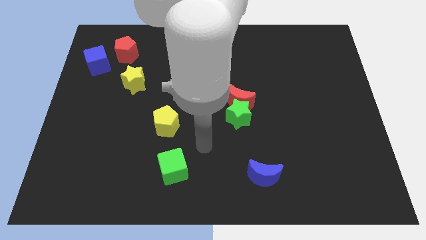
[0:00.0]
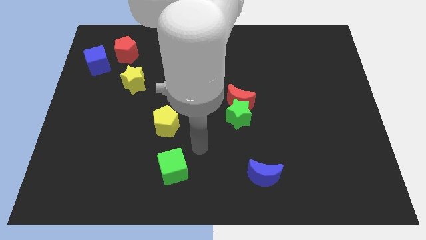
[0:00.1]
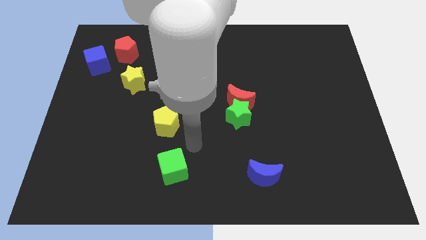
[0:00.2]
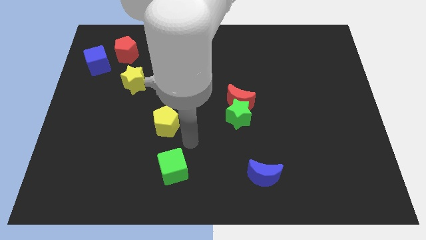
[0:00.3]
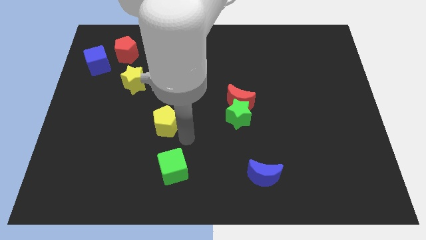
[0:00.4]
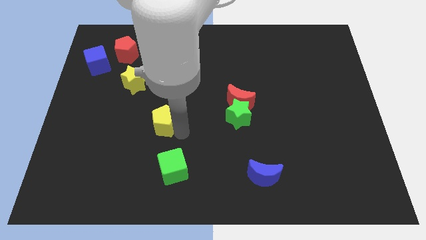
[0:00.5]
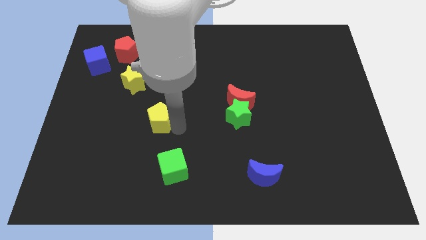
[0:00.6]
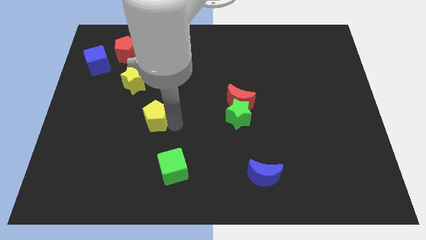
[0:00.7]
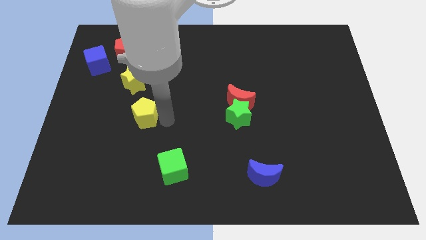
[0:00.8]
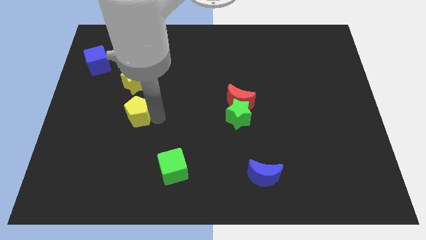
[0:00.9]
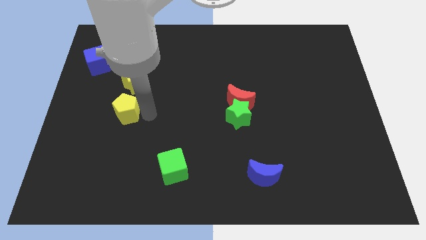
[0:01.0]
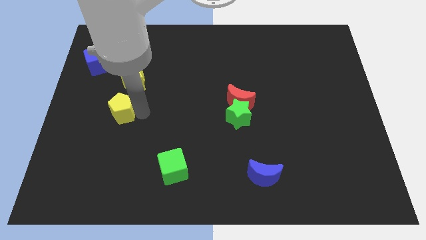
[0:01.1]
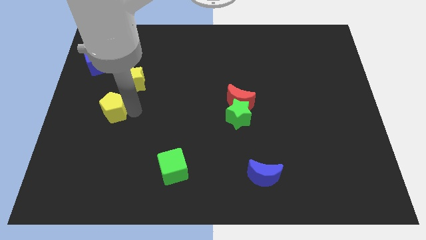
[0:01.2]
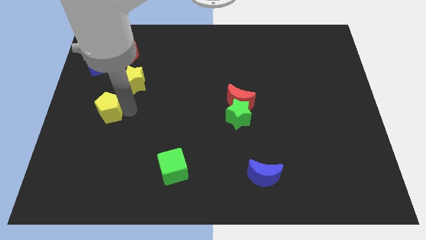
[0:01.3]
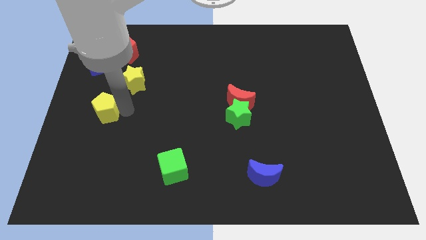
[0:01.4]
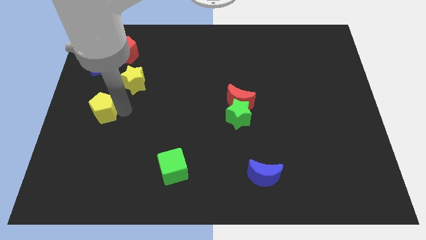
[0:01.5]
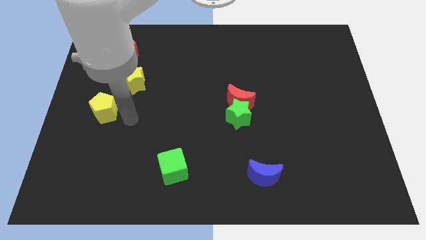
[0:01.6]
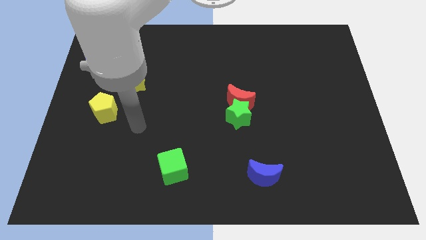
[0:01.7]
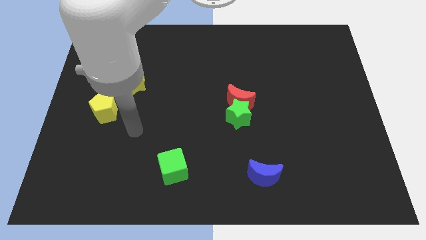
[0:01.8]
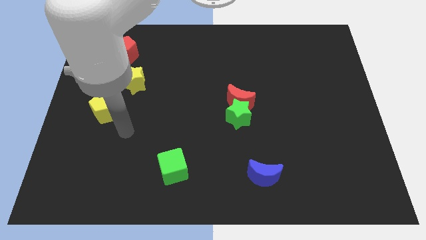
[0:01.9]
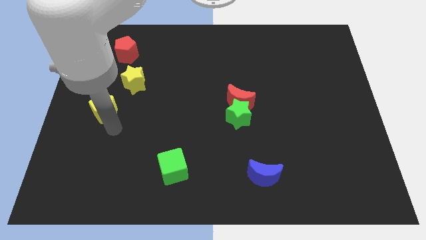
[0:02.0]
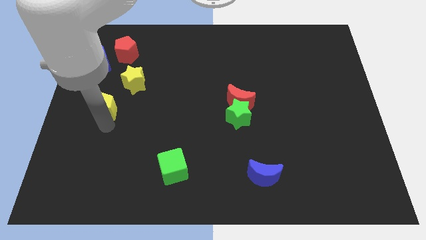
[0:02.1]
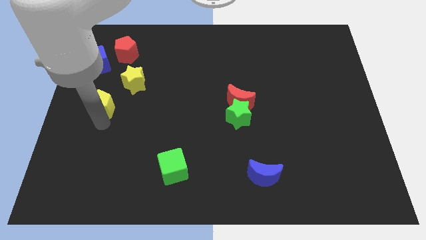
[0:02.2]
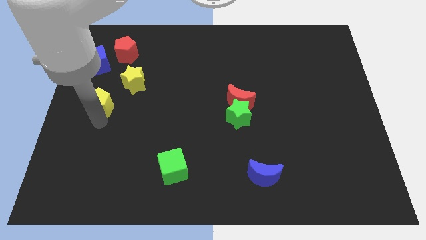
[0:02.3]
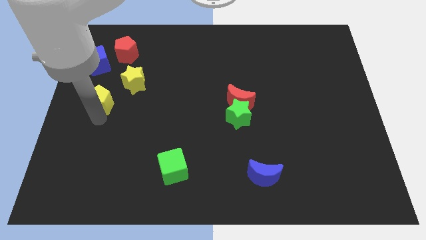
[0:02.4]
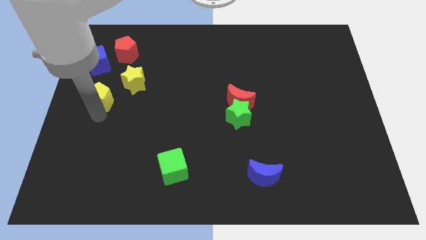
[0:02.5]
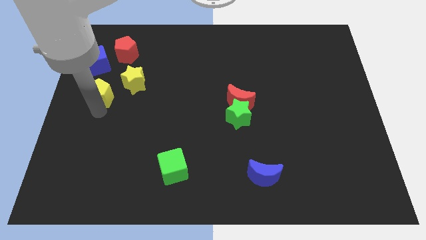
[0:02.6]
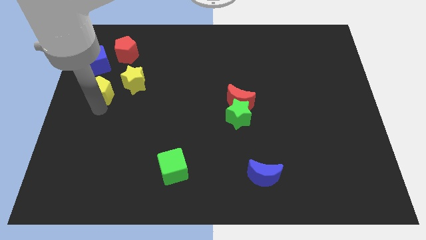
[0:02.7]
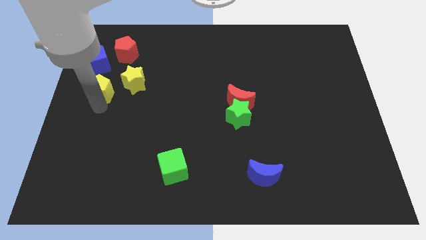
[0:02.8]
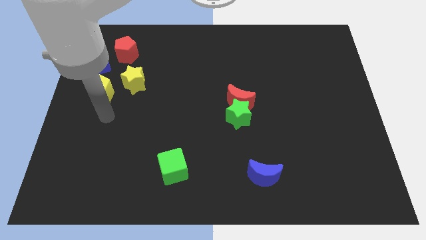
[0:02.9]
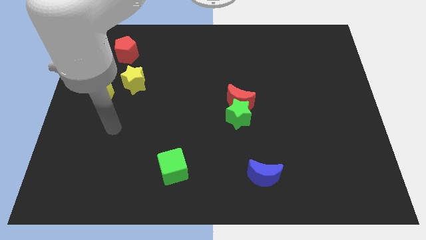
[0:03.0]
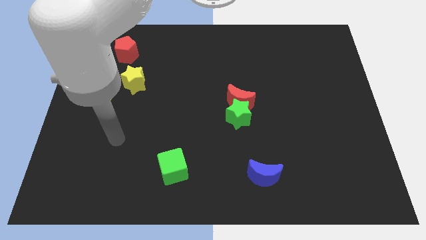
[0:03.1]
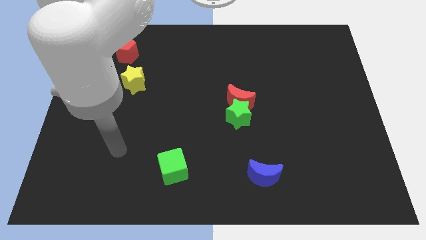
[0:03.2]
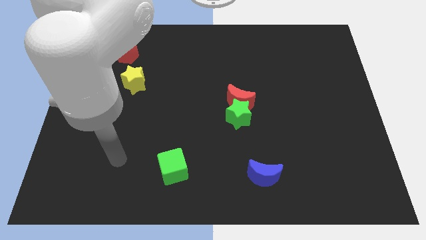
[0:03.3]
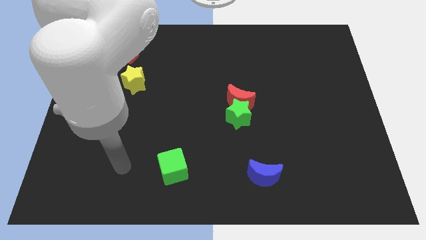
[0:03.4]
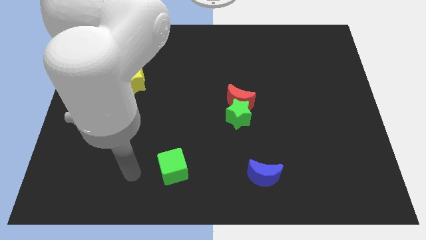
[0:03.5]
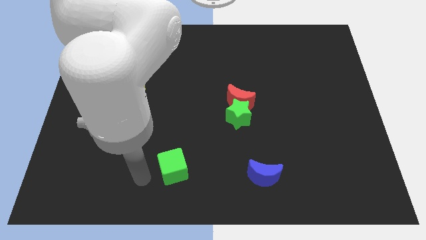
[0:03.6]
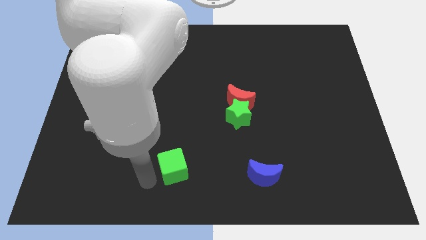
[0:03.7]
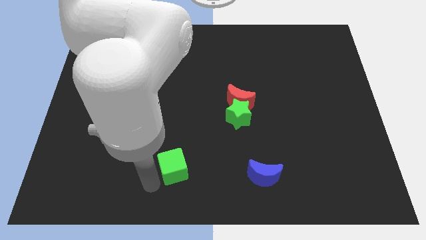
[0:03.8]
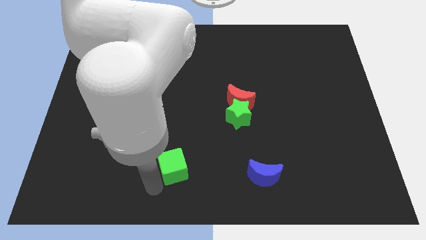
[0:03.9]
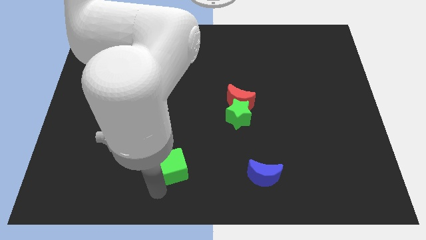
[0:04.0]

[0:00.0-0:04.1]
push the yellow pentagon to the bottom of the blue cube

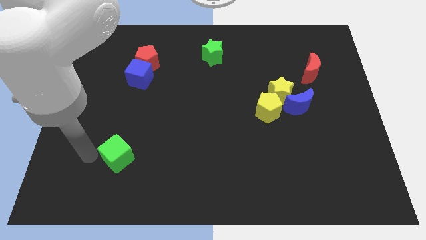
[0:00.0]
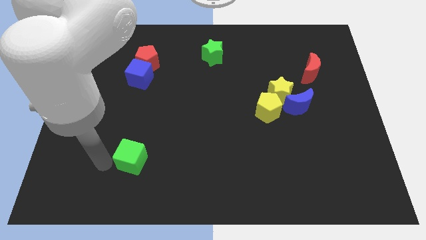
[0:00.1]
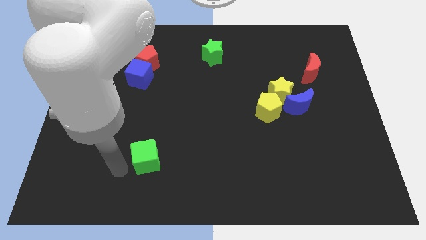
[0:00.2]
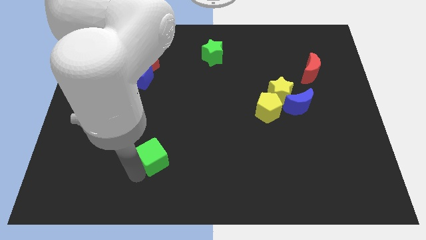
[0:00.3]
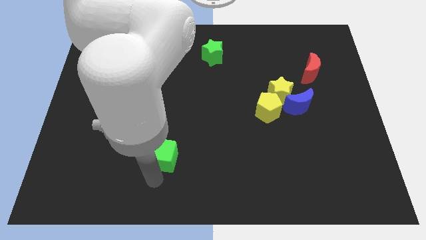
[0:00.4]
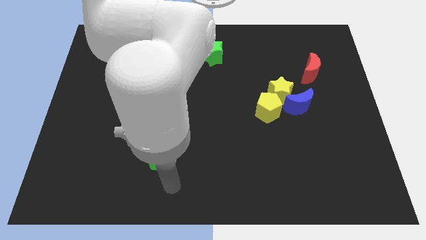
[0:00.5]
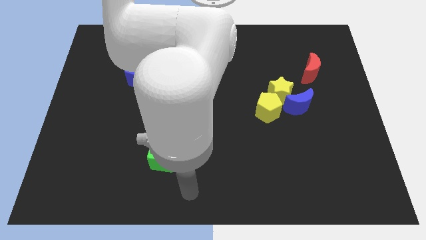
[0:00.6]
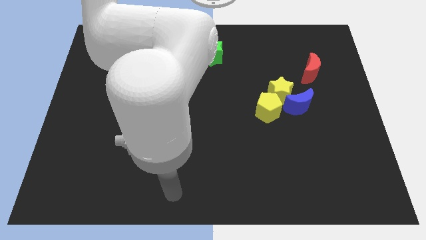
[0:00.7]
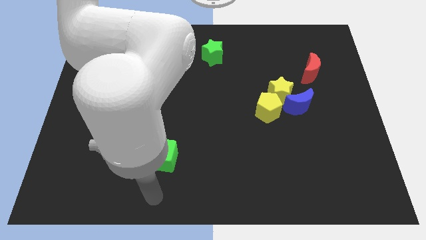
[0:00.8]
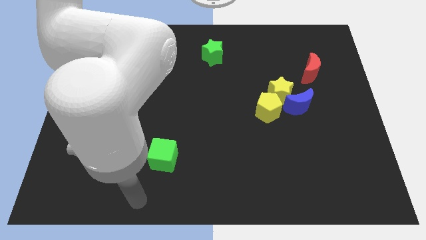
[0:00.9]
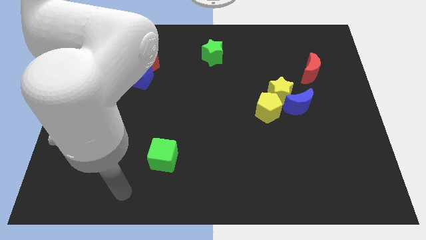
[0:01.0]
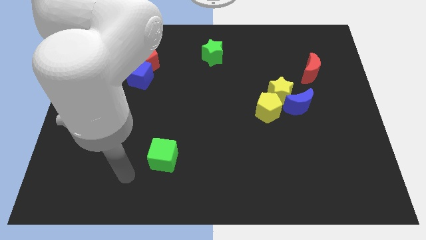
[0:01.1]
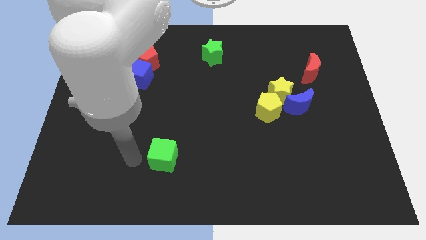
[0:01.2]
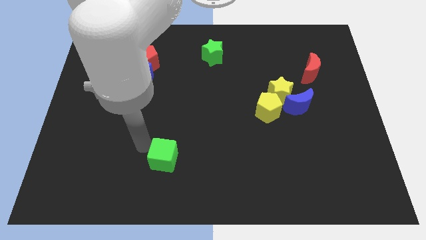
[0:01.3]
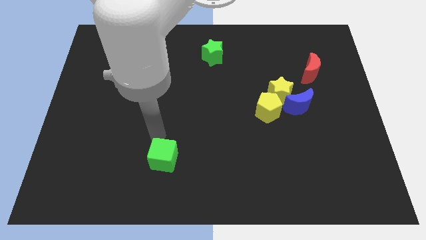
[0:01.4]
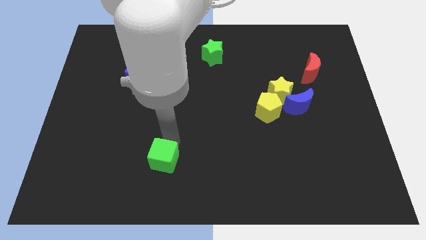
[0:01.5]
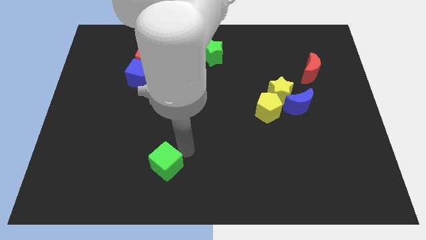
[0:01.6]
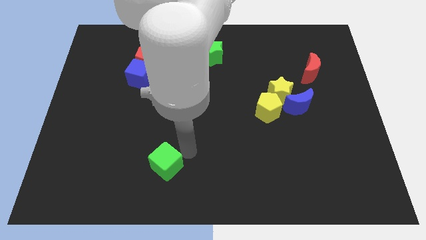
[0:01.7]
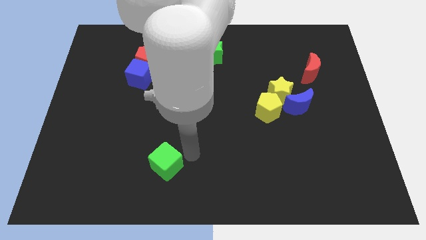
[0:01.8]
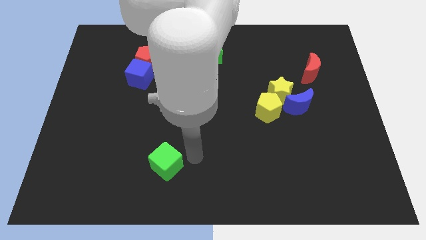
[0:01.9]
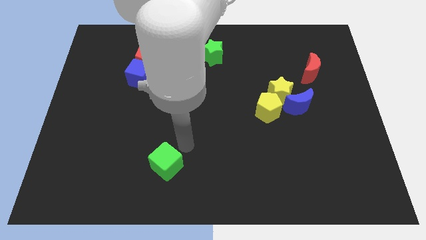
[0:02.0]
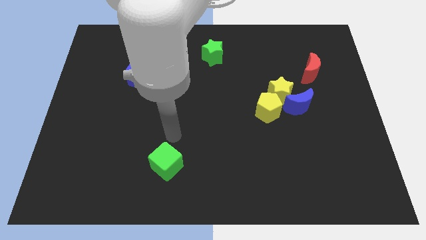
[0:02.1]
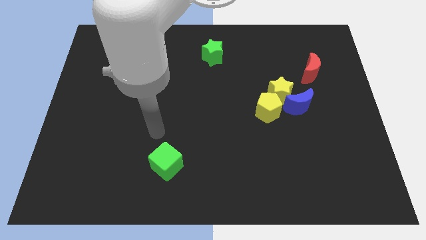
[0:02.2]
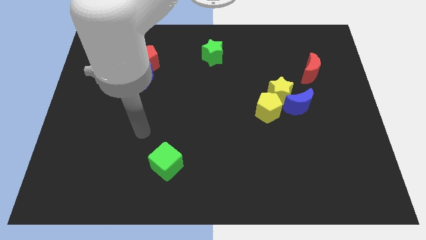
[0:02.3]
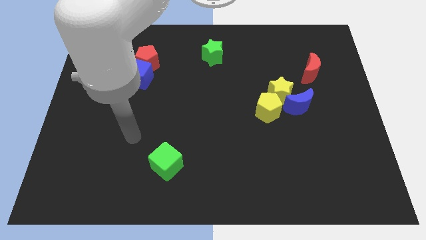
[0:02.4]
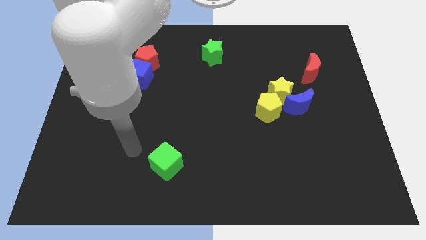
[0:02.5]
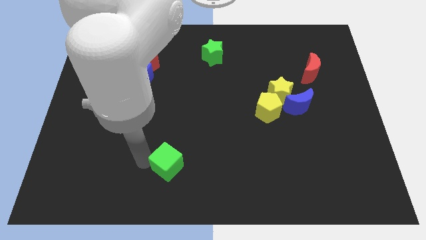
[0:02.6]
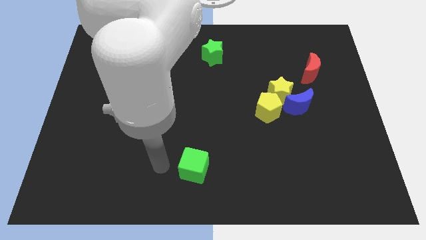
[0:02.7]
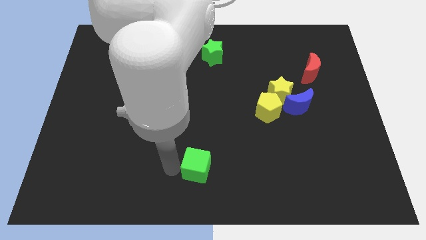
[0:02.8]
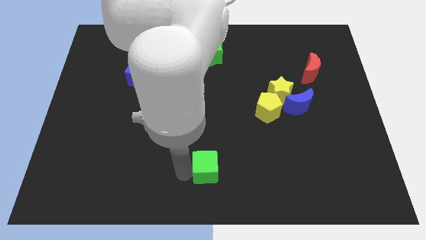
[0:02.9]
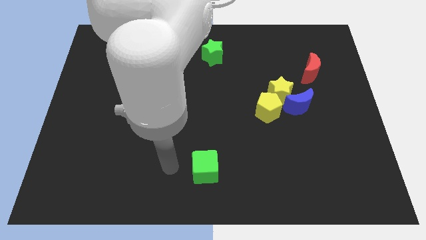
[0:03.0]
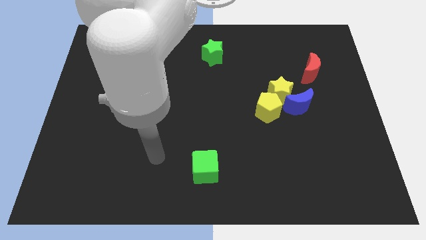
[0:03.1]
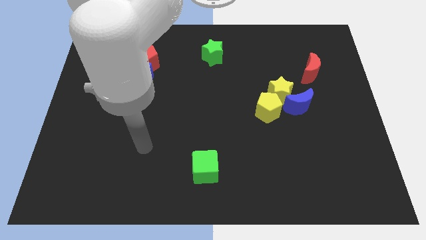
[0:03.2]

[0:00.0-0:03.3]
slide green cube in the bottom center

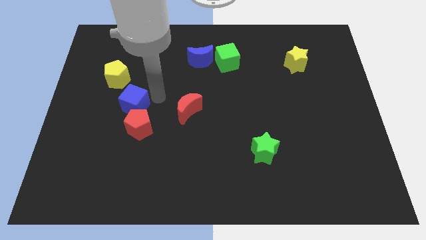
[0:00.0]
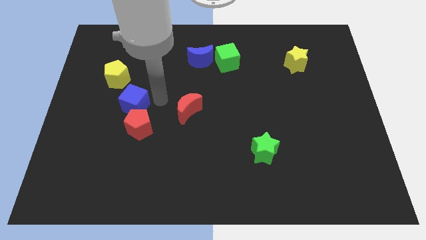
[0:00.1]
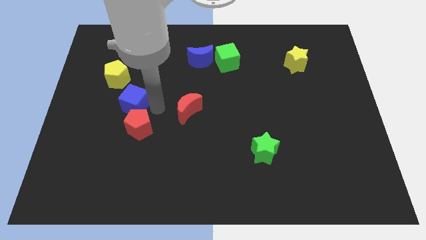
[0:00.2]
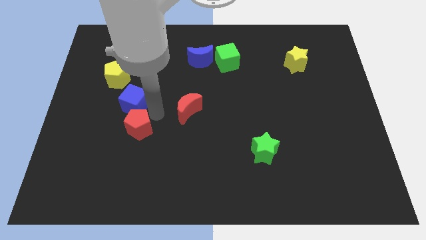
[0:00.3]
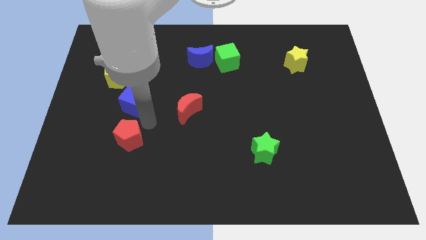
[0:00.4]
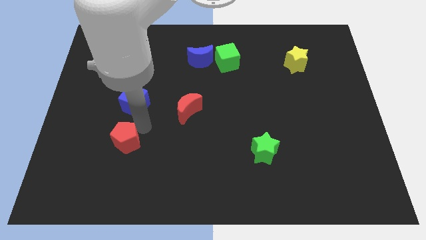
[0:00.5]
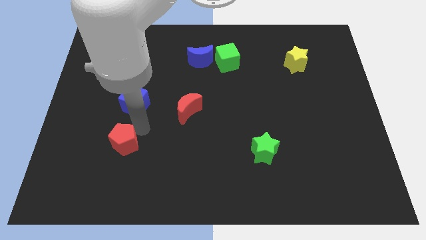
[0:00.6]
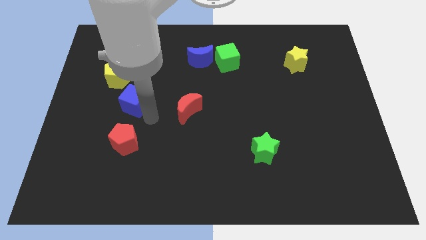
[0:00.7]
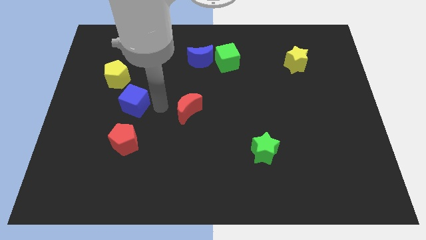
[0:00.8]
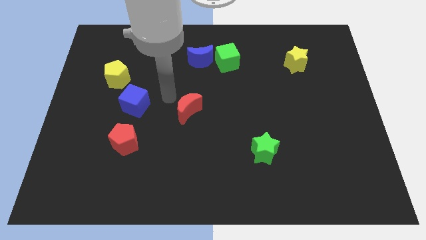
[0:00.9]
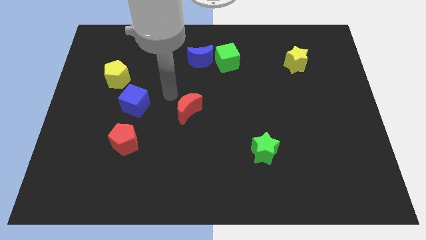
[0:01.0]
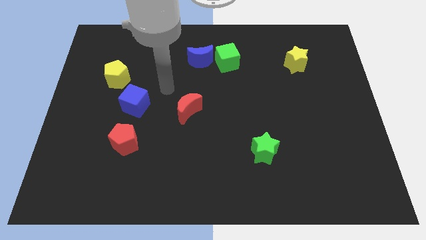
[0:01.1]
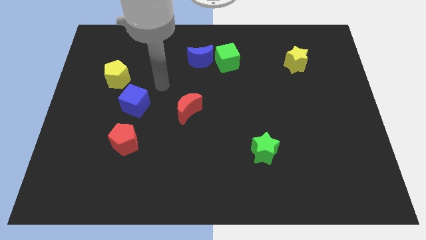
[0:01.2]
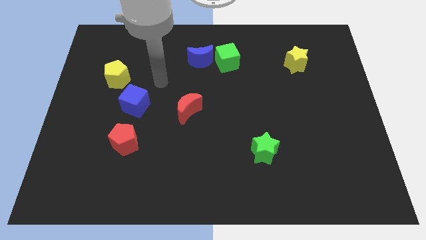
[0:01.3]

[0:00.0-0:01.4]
push the red pentagon towards the bottom left corner of the board

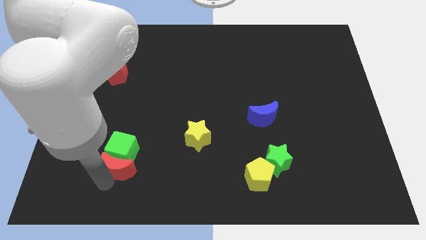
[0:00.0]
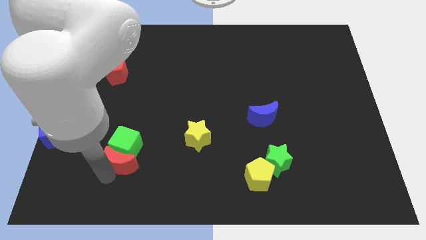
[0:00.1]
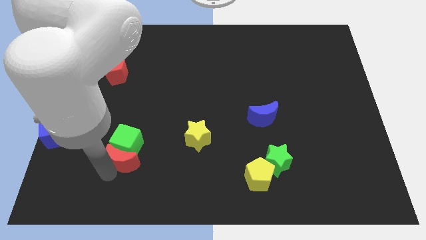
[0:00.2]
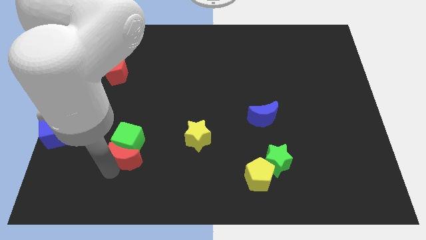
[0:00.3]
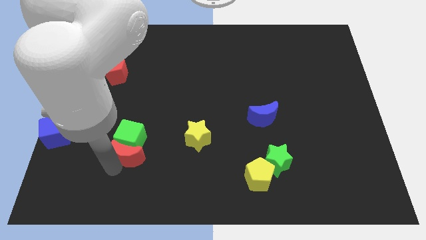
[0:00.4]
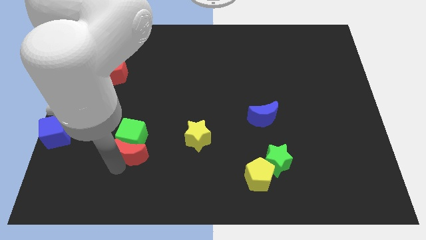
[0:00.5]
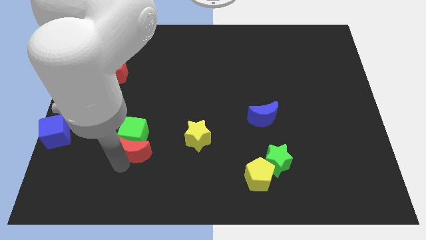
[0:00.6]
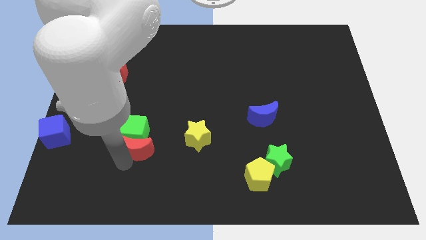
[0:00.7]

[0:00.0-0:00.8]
push red moon and green cube slightly upwards
